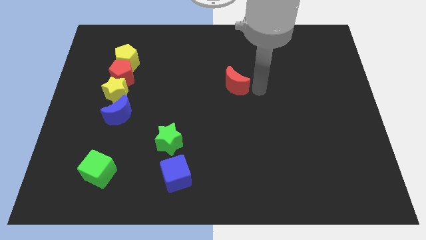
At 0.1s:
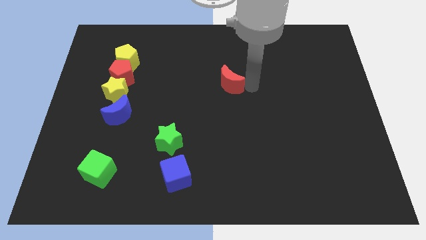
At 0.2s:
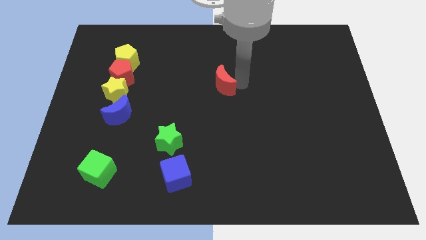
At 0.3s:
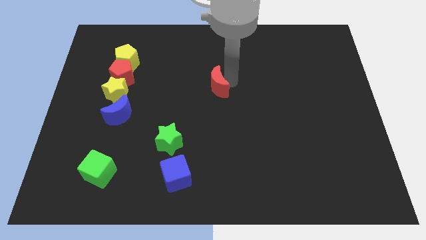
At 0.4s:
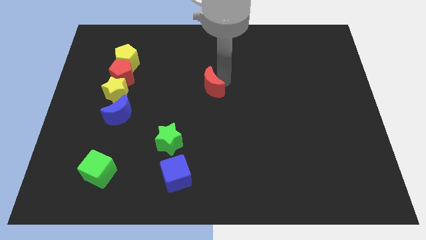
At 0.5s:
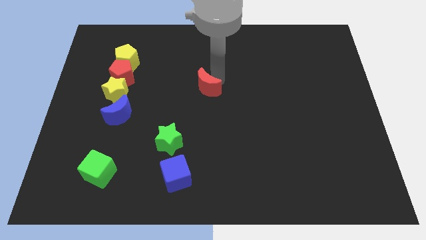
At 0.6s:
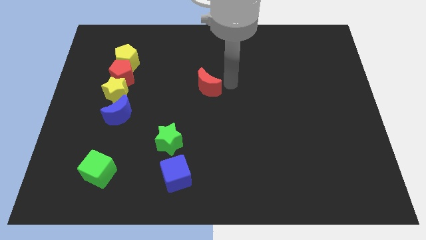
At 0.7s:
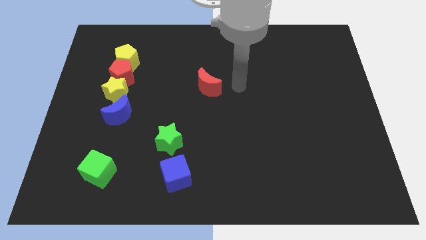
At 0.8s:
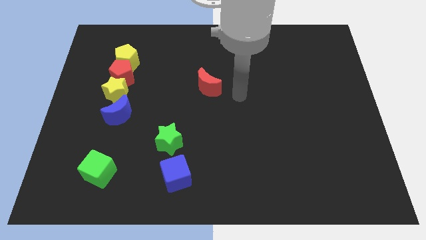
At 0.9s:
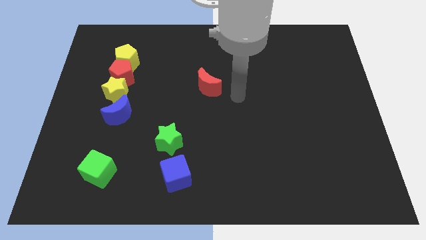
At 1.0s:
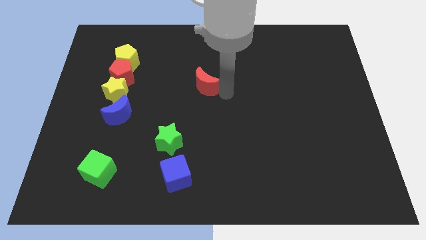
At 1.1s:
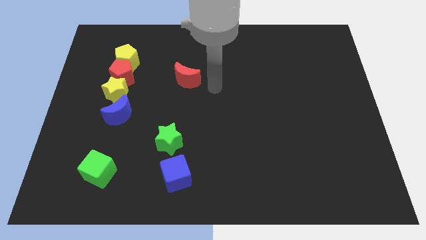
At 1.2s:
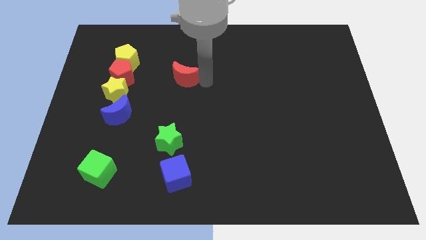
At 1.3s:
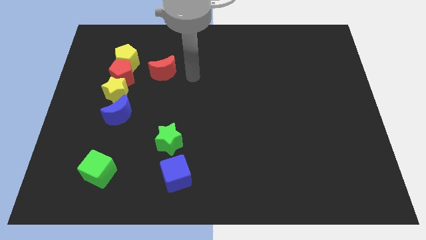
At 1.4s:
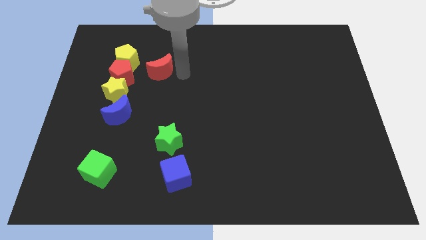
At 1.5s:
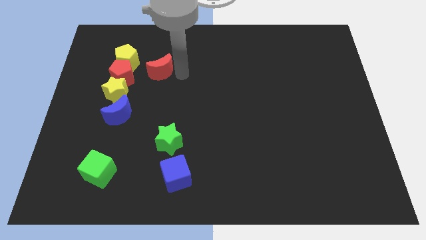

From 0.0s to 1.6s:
push the red moon towards the right to the red pentagon

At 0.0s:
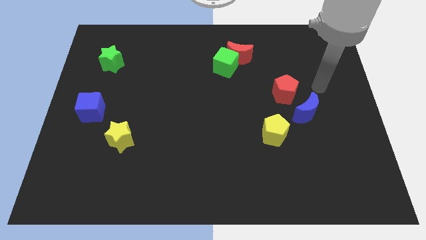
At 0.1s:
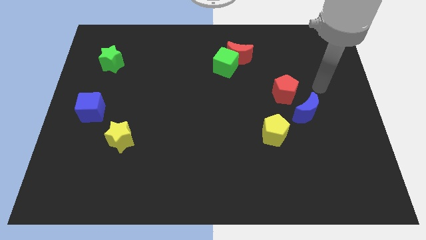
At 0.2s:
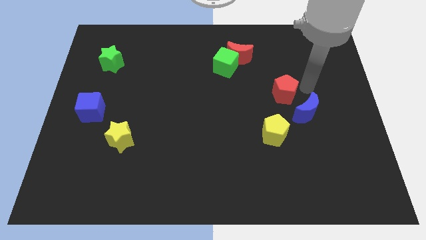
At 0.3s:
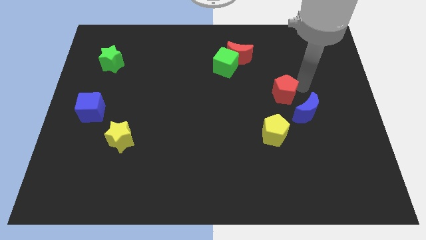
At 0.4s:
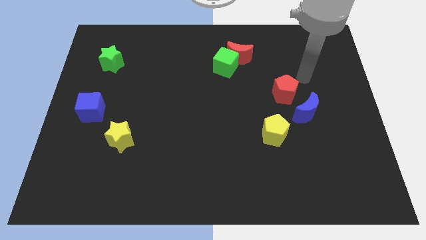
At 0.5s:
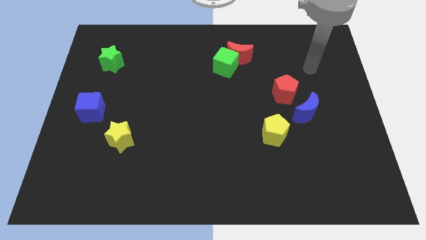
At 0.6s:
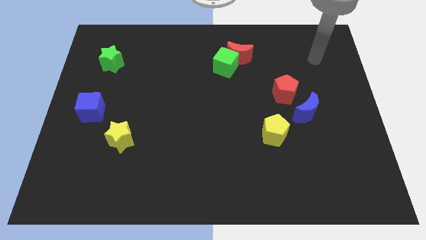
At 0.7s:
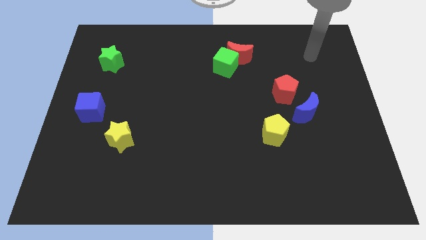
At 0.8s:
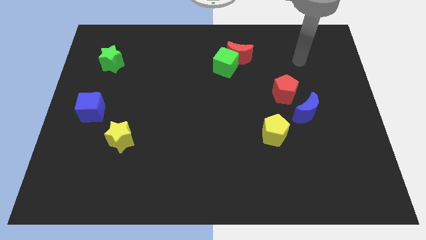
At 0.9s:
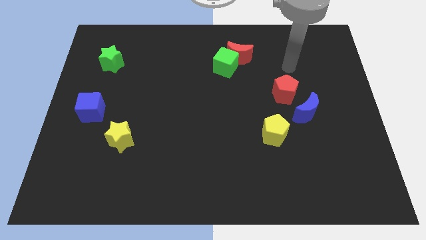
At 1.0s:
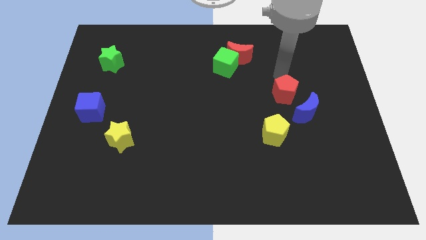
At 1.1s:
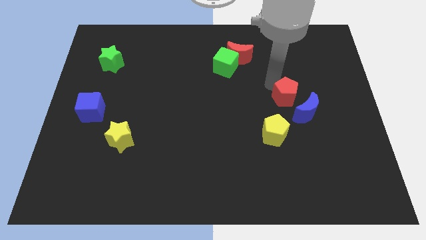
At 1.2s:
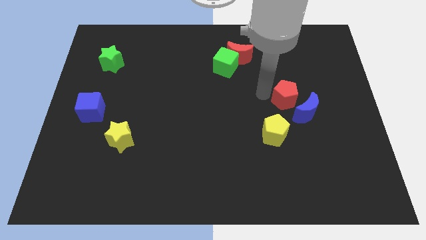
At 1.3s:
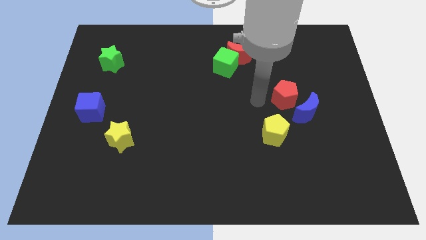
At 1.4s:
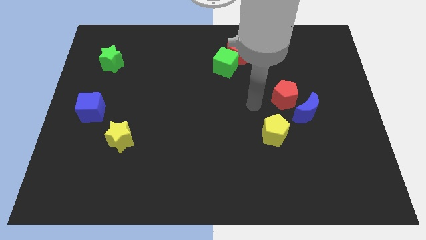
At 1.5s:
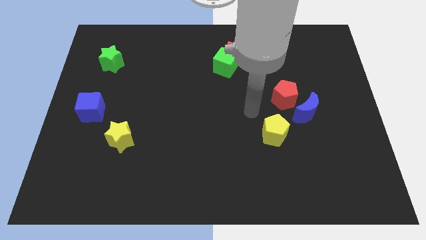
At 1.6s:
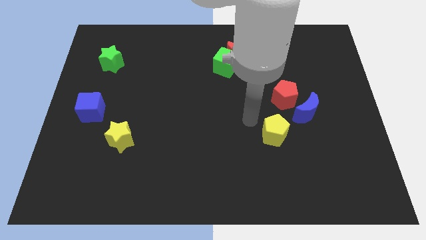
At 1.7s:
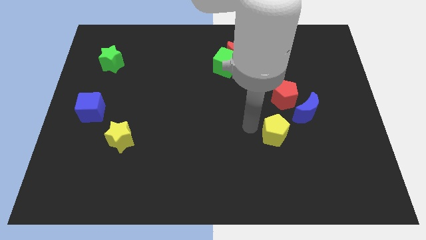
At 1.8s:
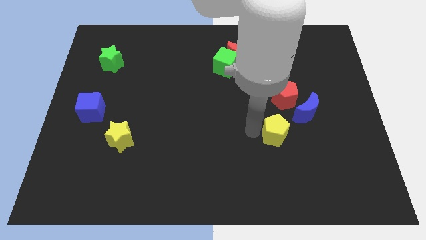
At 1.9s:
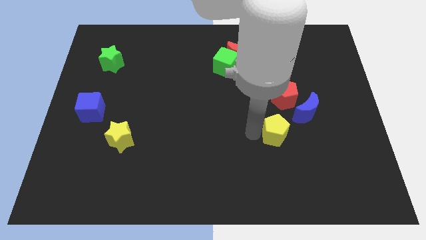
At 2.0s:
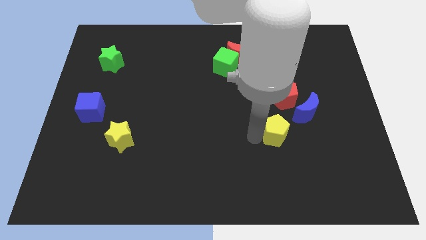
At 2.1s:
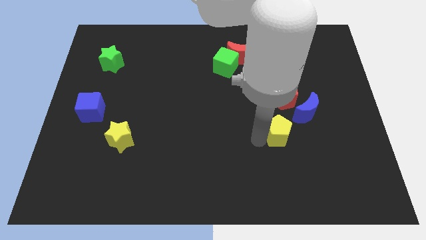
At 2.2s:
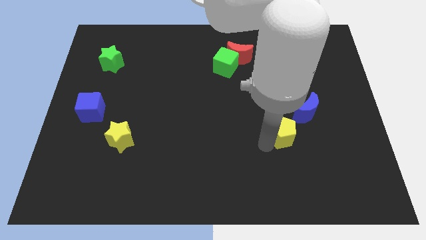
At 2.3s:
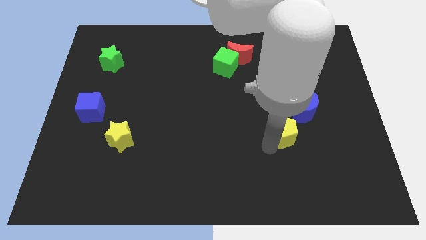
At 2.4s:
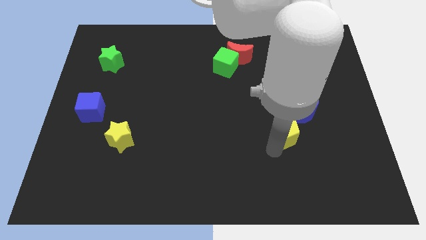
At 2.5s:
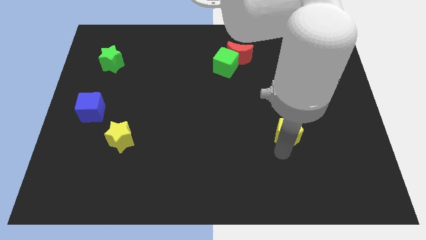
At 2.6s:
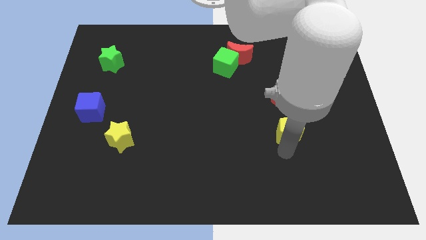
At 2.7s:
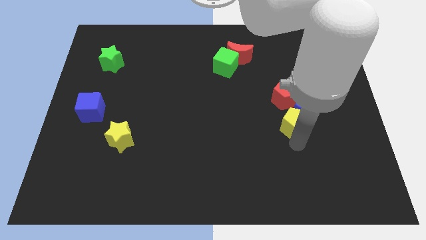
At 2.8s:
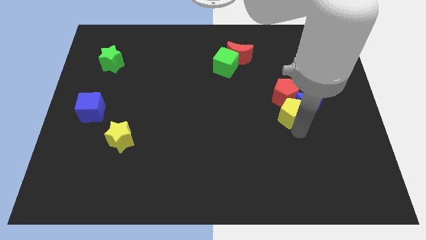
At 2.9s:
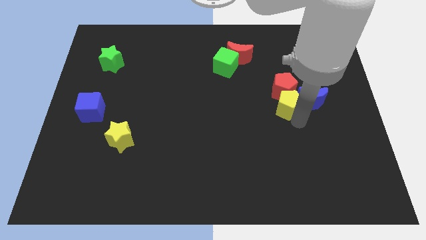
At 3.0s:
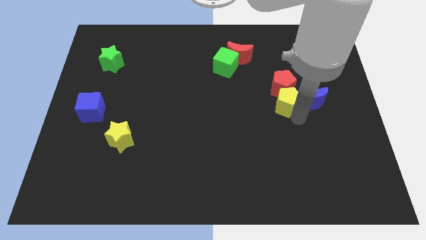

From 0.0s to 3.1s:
push the yellow pentagon into the red pentagon

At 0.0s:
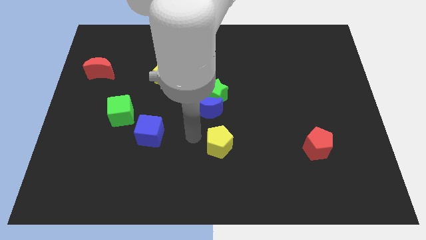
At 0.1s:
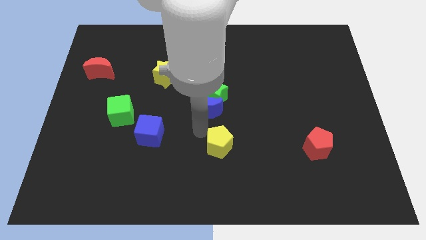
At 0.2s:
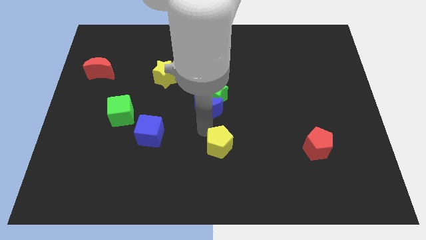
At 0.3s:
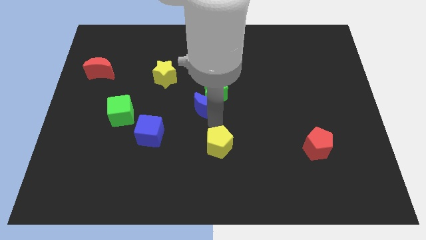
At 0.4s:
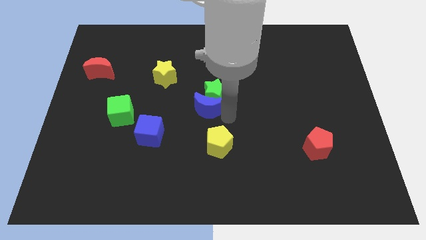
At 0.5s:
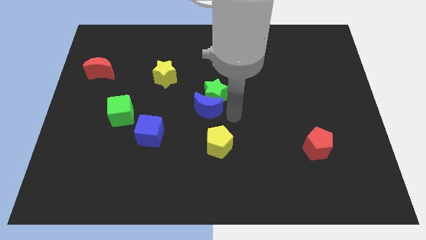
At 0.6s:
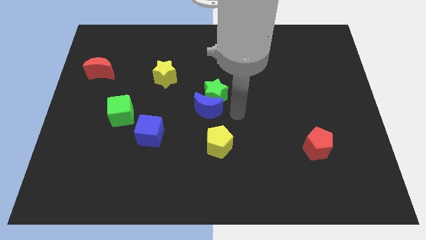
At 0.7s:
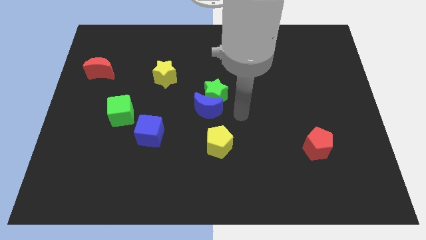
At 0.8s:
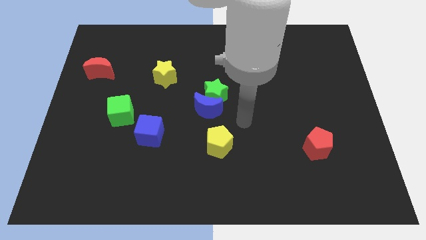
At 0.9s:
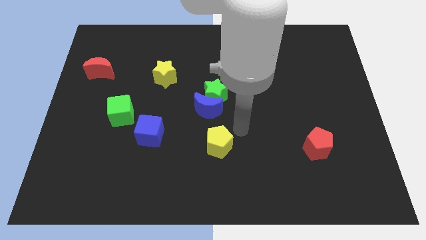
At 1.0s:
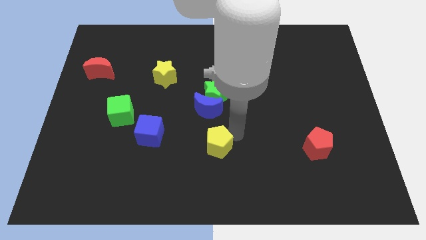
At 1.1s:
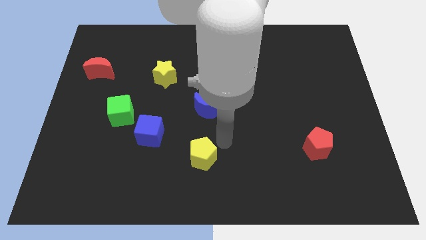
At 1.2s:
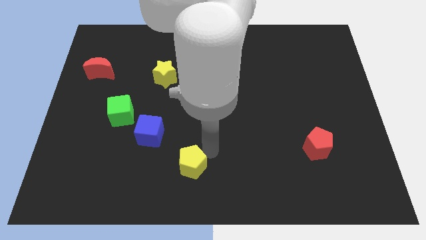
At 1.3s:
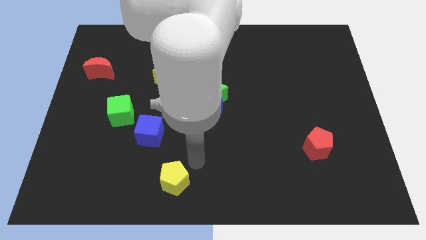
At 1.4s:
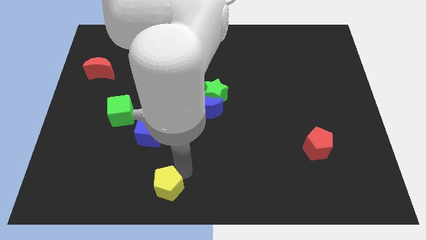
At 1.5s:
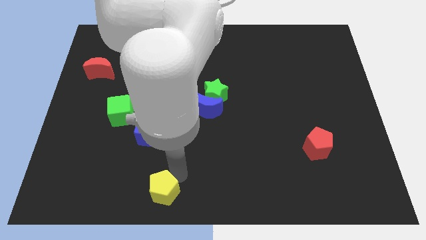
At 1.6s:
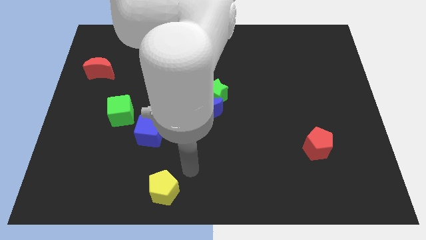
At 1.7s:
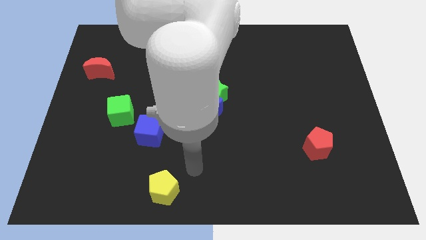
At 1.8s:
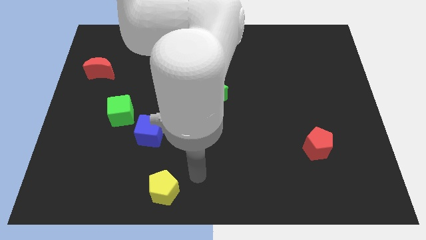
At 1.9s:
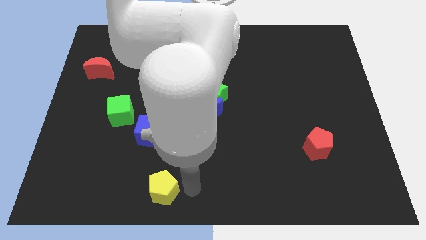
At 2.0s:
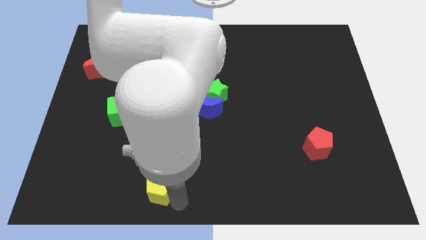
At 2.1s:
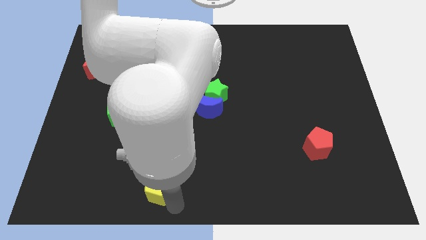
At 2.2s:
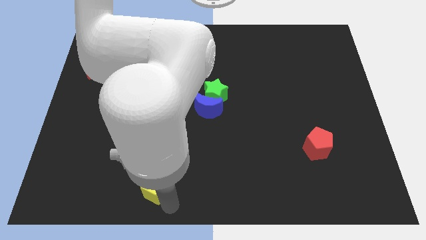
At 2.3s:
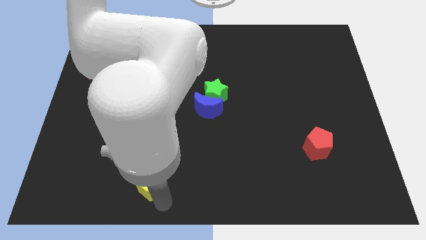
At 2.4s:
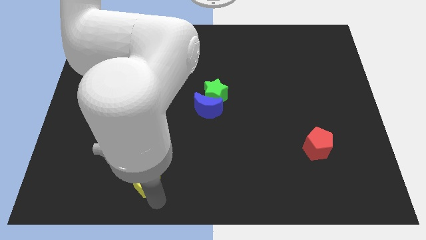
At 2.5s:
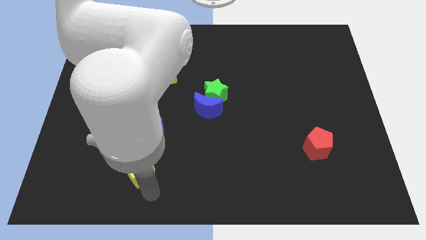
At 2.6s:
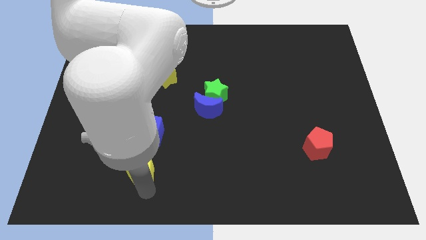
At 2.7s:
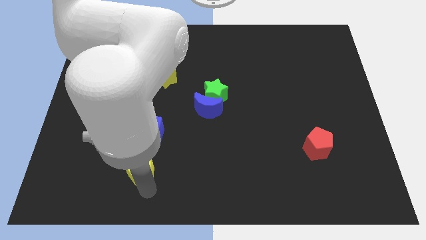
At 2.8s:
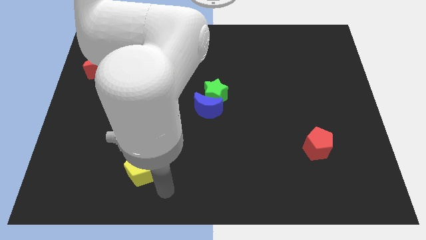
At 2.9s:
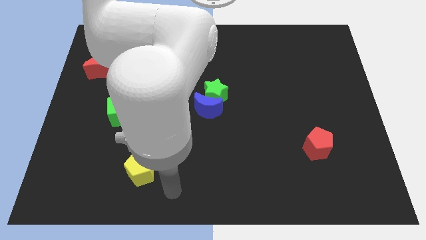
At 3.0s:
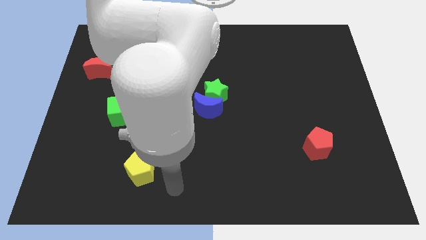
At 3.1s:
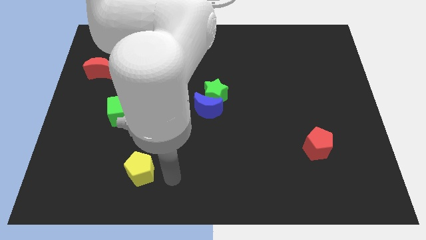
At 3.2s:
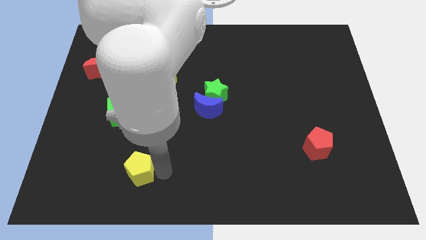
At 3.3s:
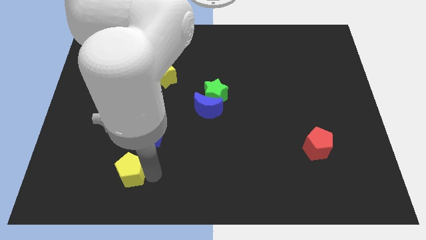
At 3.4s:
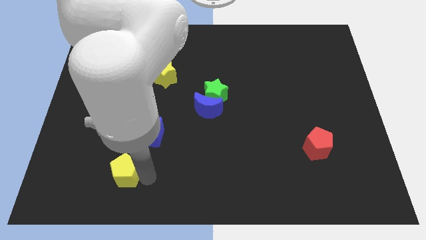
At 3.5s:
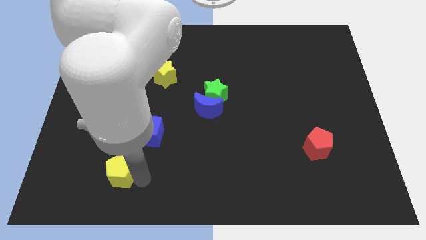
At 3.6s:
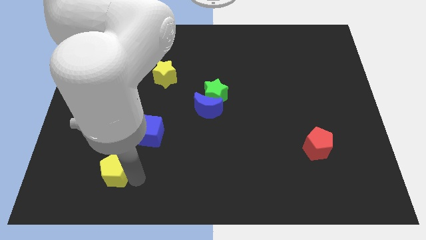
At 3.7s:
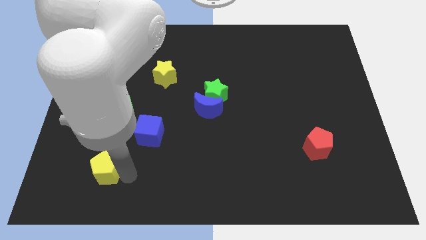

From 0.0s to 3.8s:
move the yellow pentagon vertically below the green cube

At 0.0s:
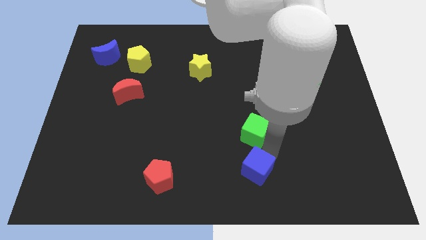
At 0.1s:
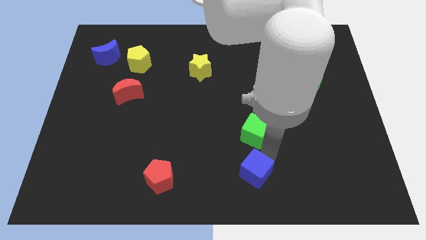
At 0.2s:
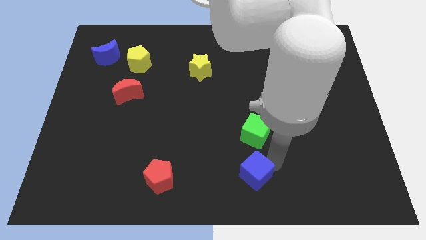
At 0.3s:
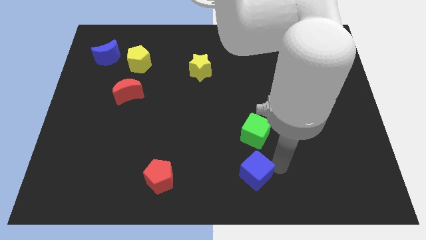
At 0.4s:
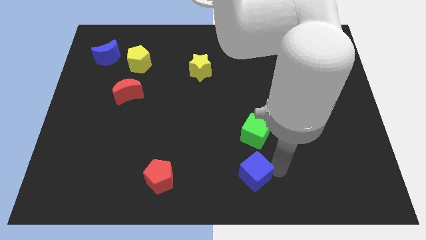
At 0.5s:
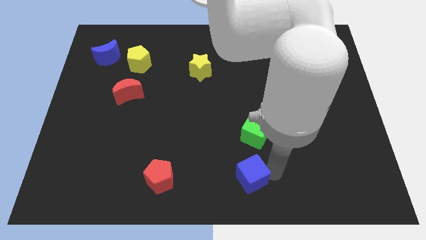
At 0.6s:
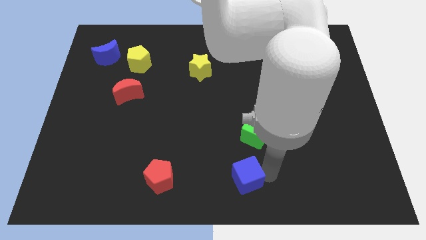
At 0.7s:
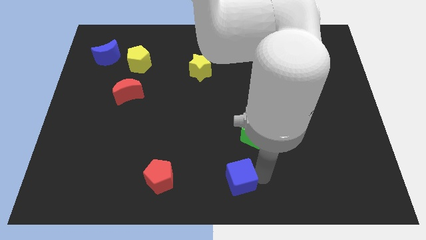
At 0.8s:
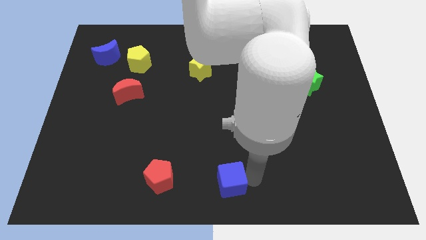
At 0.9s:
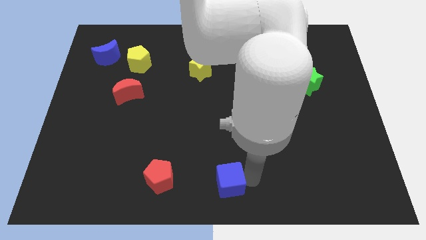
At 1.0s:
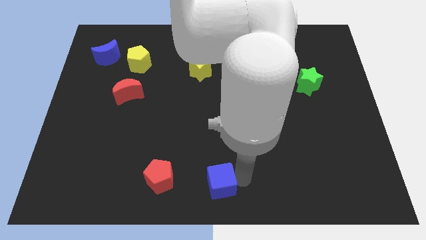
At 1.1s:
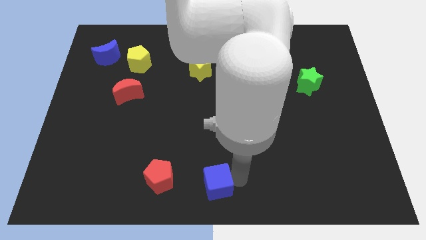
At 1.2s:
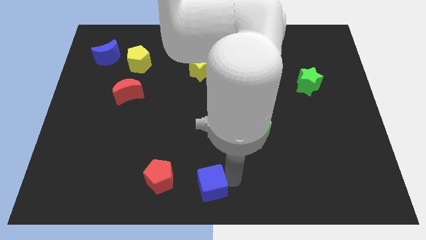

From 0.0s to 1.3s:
place the blue cube diagonally at the bottom right of the red pentagon
